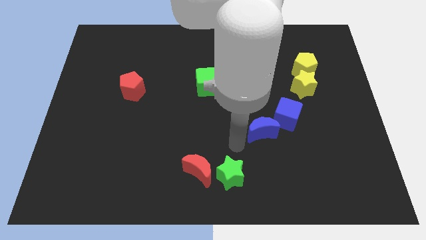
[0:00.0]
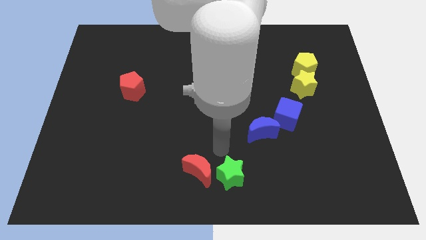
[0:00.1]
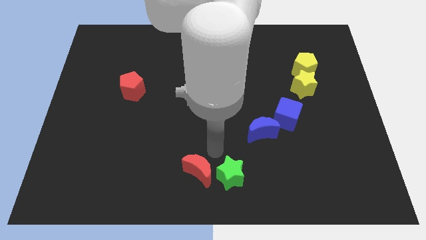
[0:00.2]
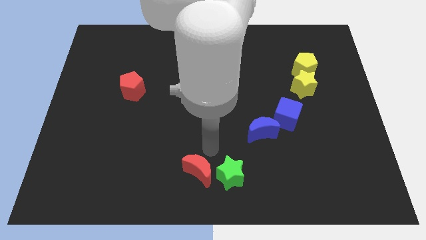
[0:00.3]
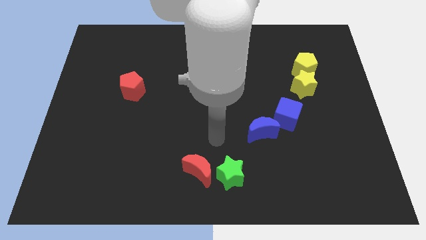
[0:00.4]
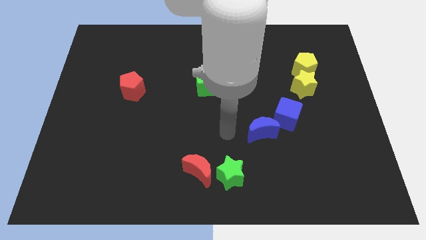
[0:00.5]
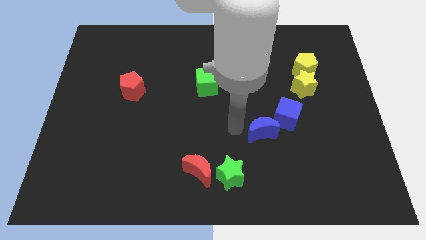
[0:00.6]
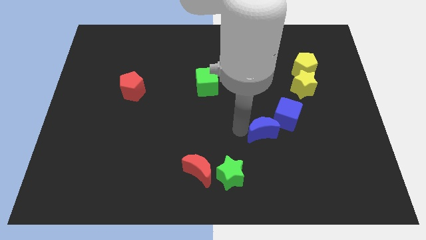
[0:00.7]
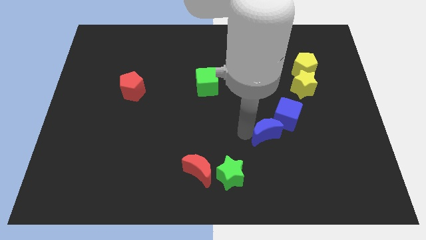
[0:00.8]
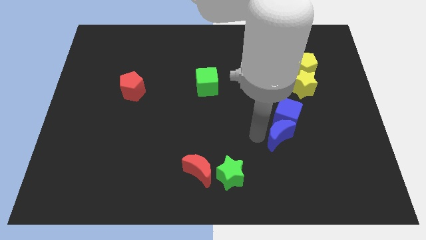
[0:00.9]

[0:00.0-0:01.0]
place your arm to the left of the blue moon

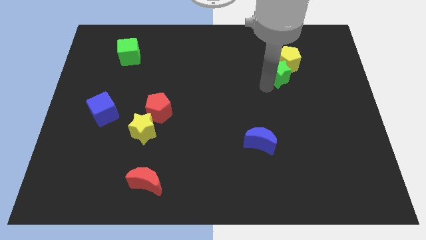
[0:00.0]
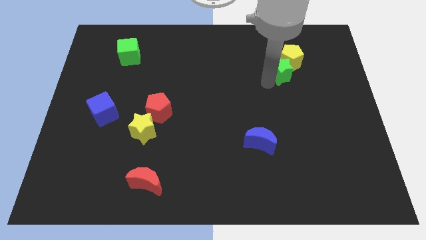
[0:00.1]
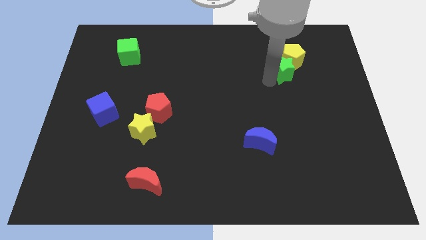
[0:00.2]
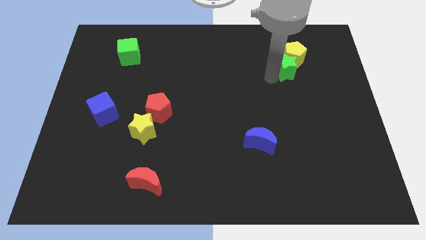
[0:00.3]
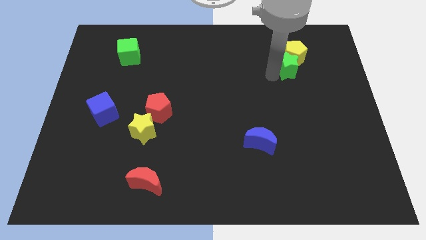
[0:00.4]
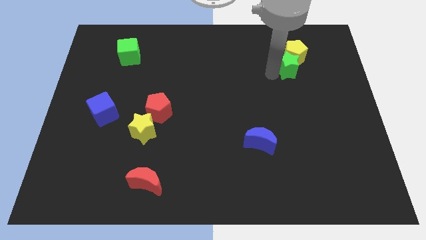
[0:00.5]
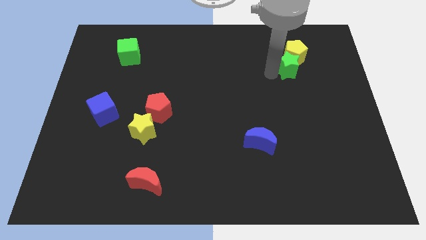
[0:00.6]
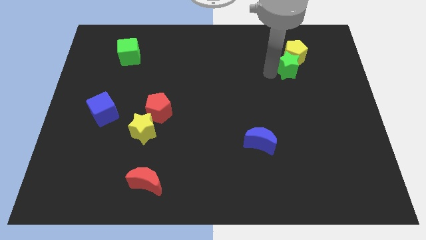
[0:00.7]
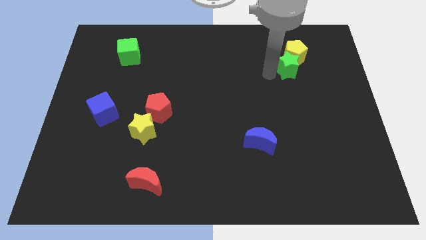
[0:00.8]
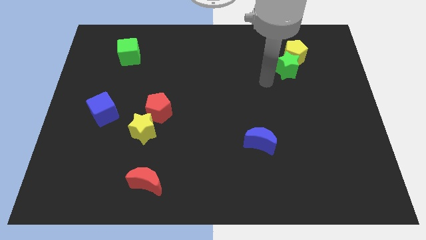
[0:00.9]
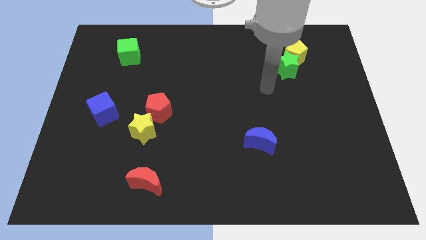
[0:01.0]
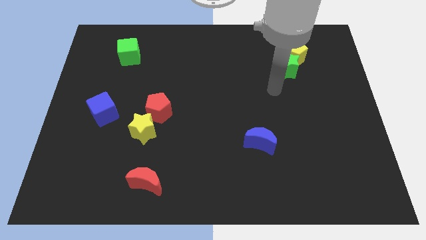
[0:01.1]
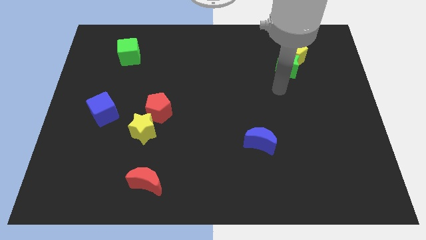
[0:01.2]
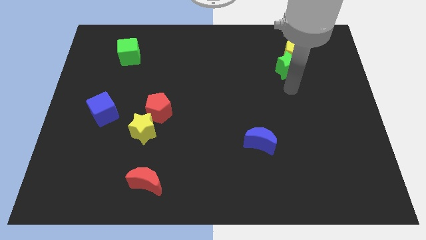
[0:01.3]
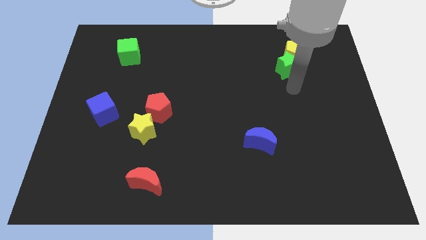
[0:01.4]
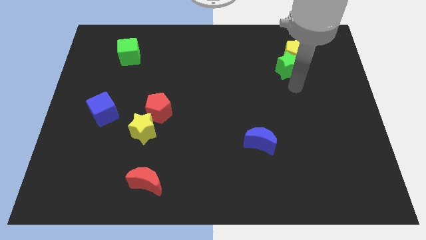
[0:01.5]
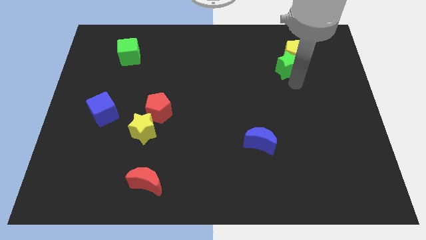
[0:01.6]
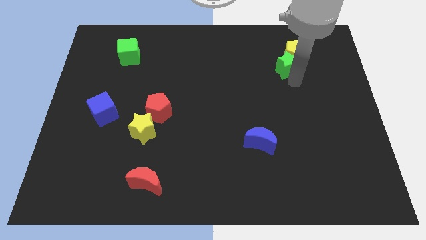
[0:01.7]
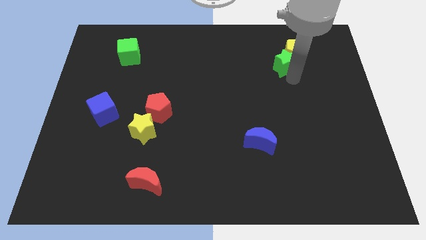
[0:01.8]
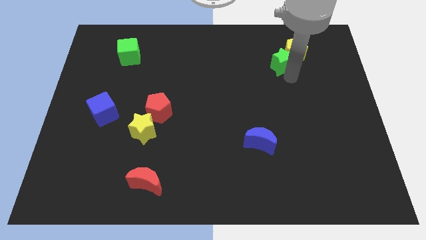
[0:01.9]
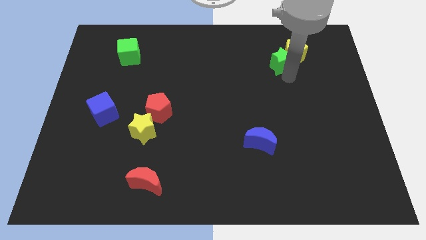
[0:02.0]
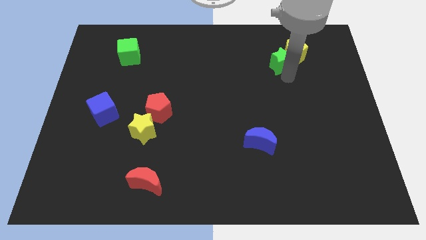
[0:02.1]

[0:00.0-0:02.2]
move the yellow pentagon and green star toward the top right of the board

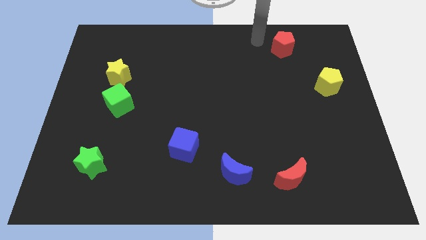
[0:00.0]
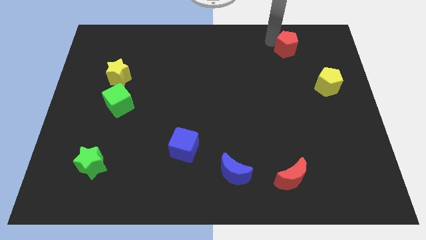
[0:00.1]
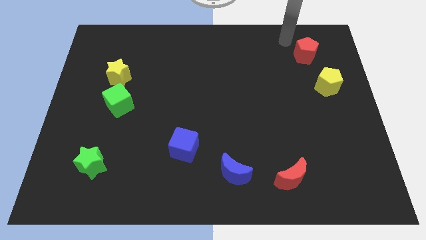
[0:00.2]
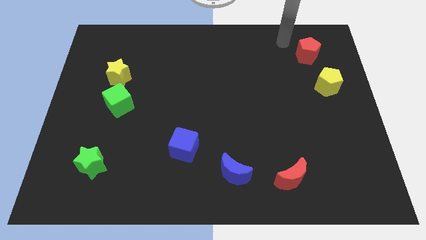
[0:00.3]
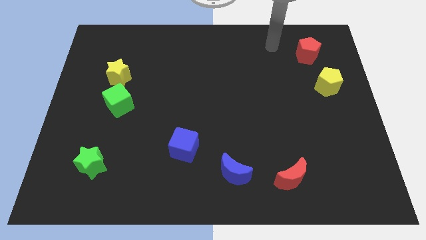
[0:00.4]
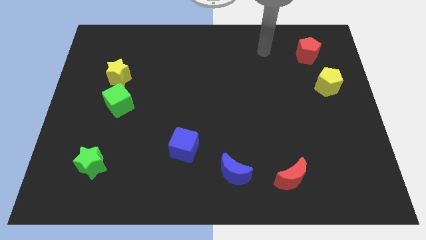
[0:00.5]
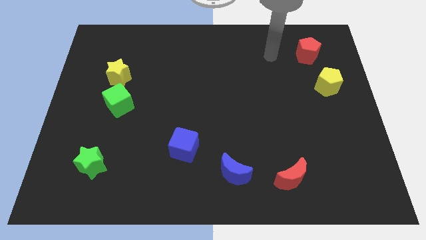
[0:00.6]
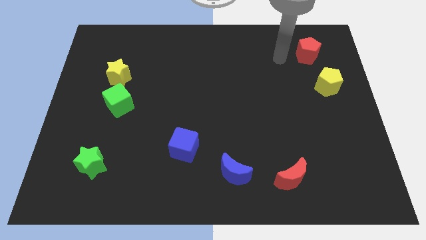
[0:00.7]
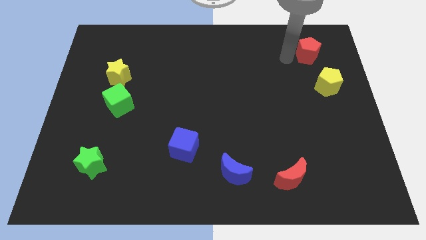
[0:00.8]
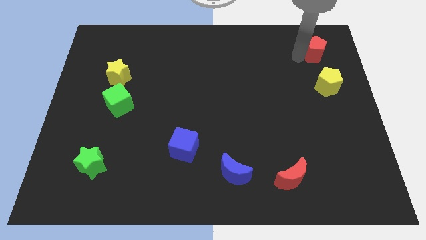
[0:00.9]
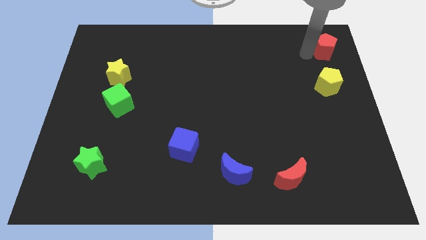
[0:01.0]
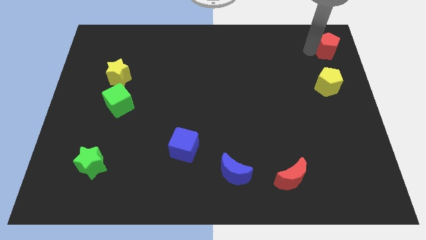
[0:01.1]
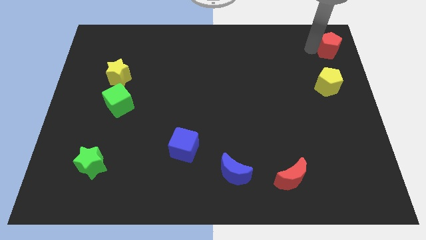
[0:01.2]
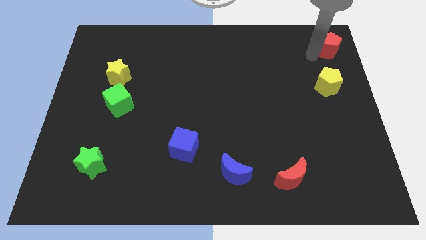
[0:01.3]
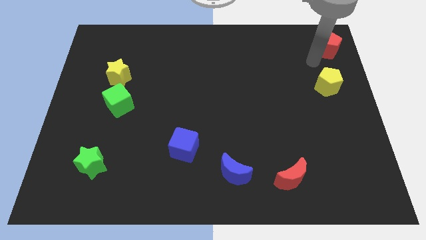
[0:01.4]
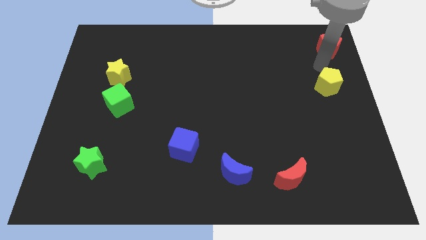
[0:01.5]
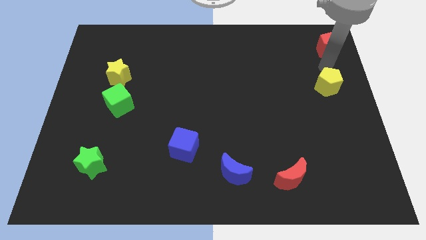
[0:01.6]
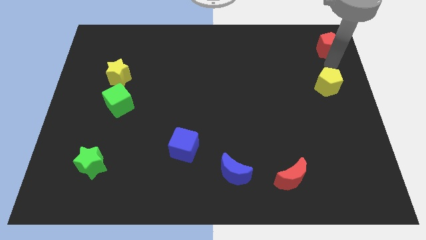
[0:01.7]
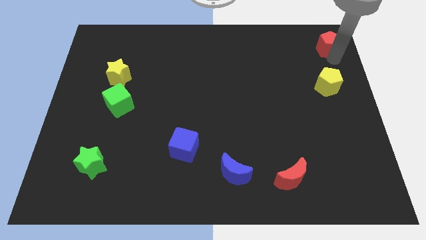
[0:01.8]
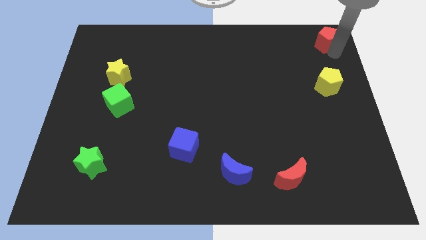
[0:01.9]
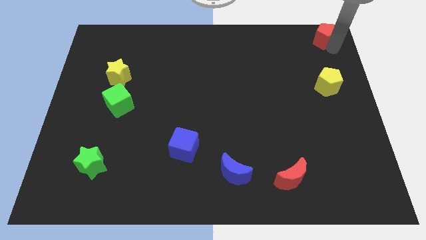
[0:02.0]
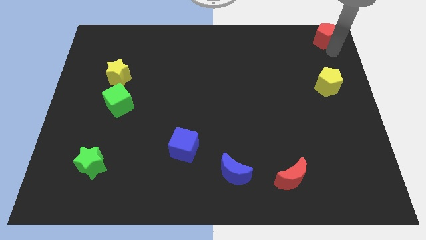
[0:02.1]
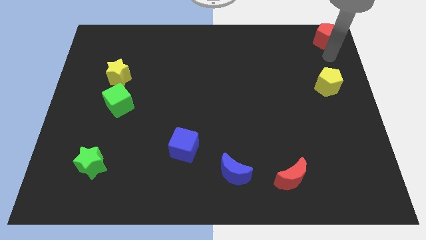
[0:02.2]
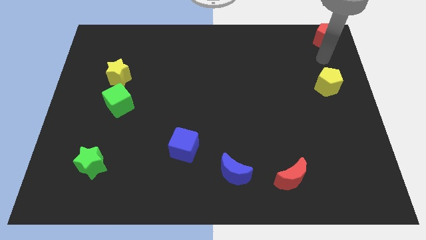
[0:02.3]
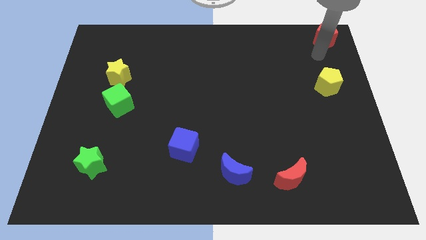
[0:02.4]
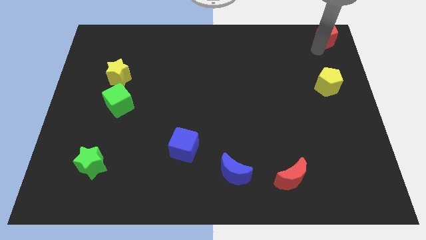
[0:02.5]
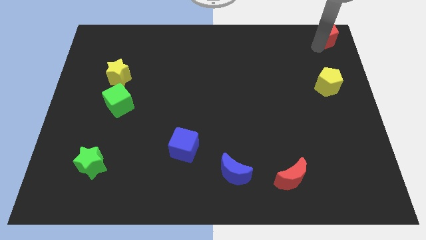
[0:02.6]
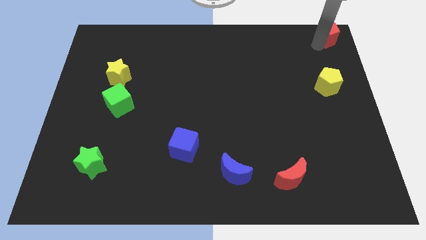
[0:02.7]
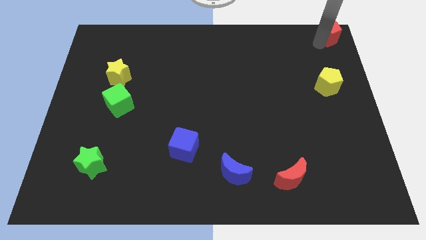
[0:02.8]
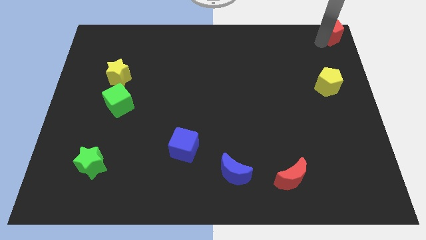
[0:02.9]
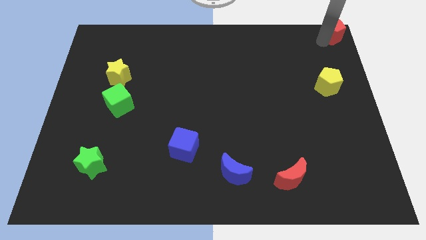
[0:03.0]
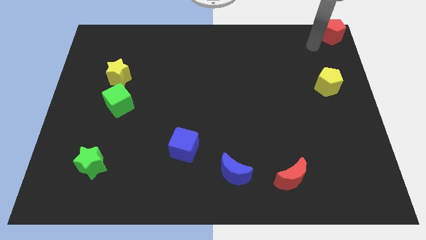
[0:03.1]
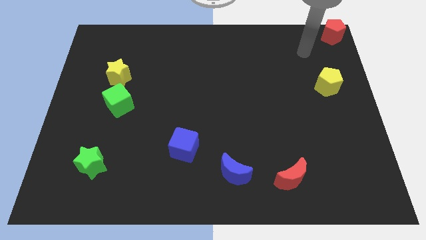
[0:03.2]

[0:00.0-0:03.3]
move the red pentagon to the top right corner

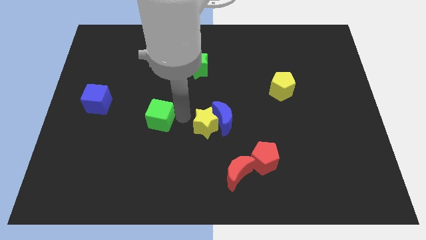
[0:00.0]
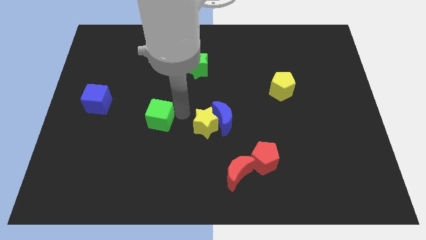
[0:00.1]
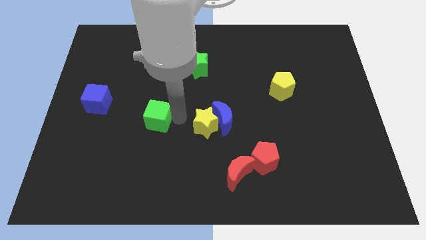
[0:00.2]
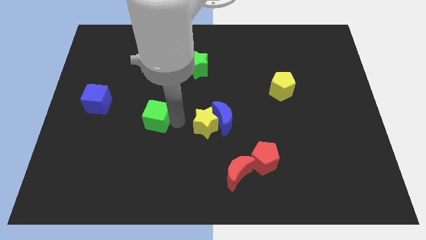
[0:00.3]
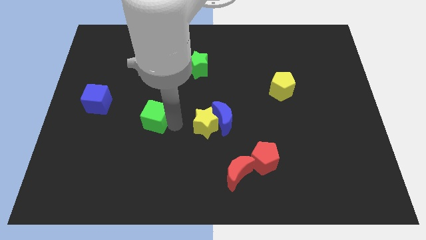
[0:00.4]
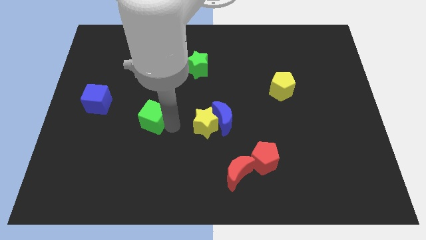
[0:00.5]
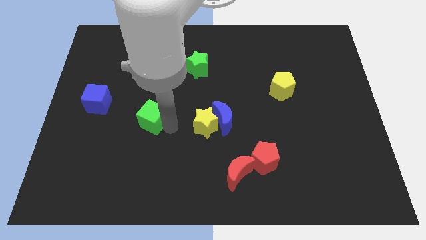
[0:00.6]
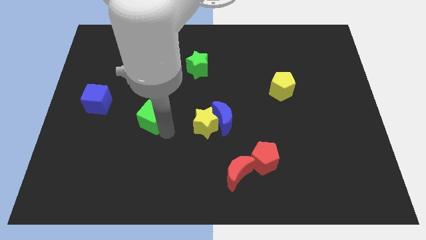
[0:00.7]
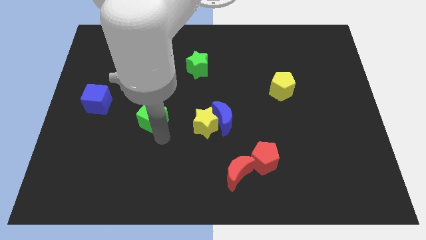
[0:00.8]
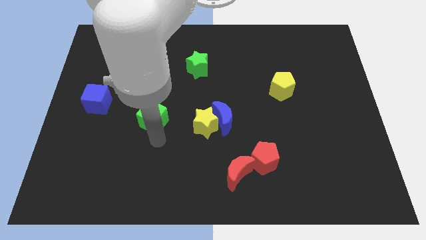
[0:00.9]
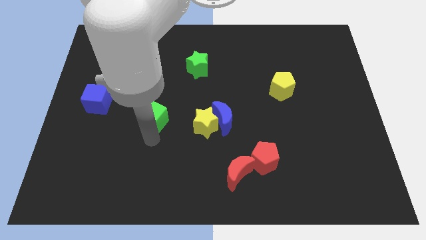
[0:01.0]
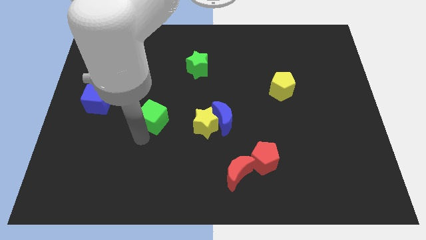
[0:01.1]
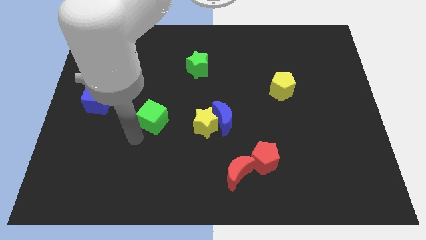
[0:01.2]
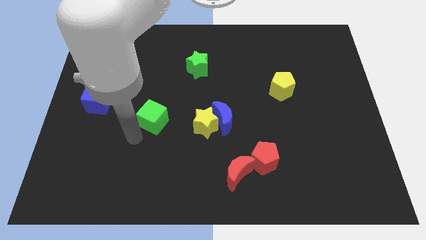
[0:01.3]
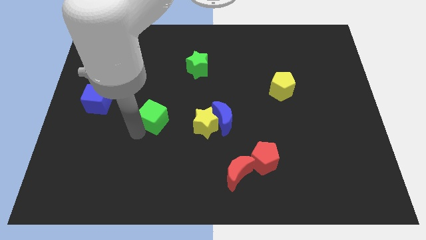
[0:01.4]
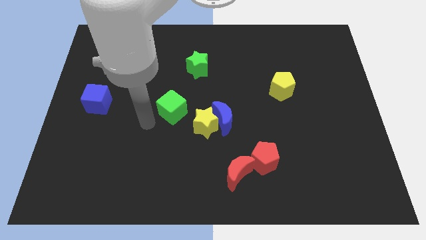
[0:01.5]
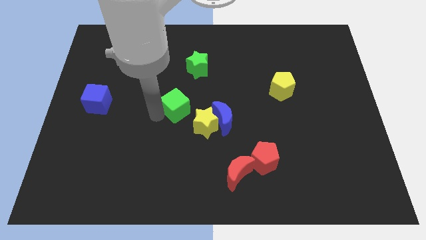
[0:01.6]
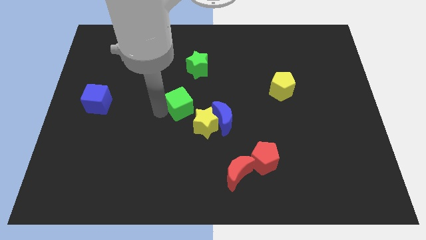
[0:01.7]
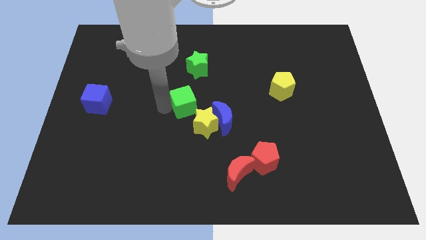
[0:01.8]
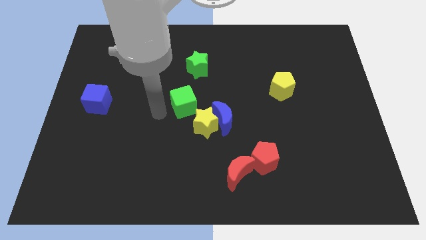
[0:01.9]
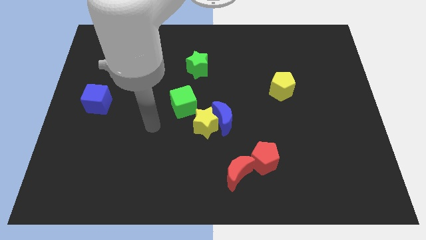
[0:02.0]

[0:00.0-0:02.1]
move green cube diagonal to yellow star

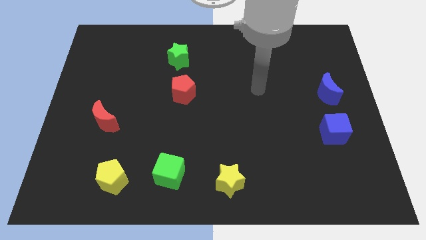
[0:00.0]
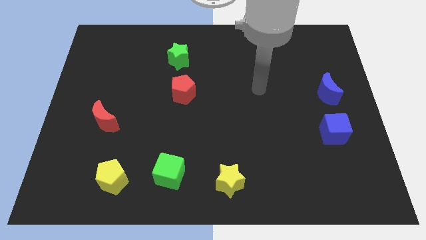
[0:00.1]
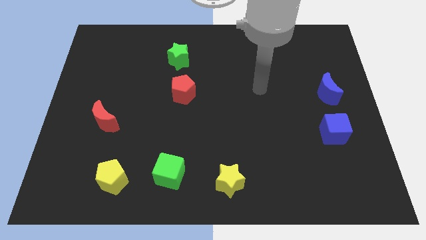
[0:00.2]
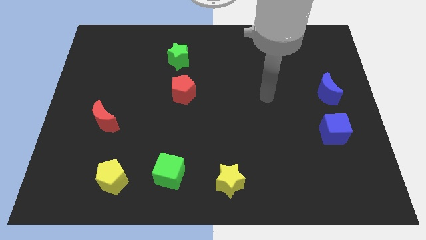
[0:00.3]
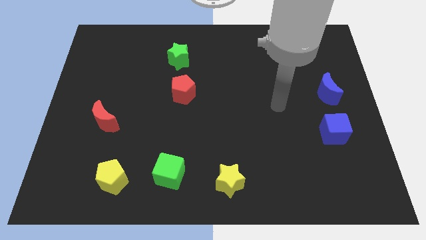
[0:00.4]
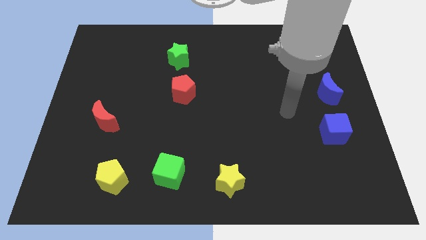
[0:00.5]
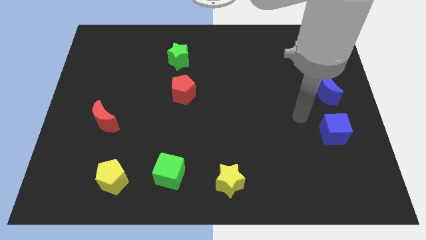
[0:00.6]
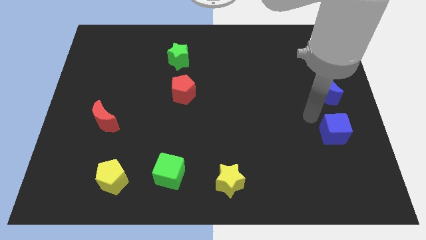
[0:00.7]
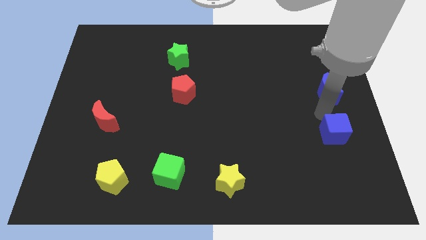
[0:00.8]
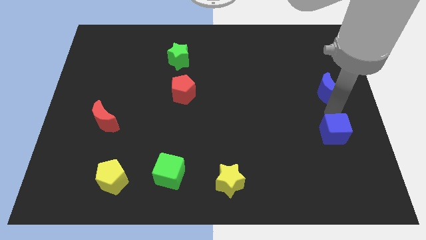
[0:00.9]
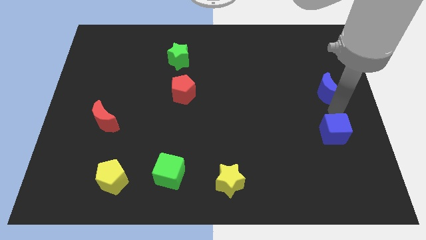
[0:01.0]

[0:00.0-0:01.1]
place your arm in between blue blocks
